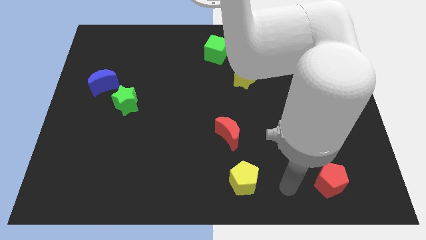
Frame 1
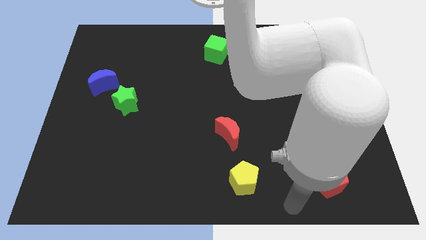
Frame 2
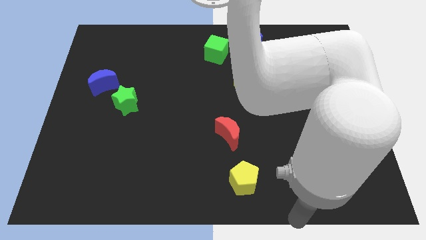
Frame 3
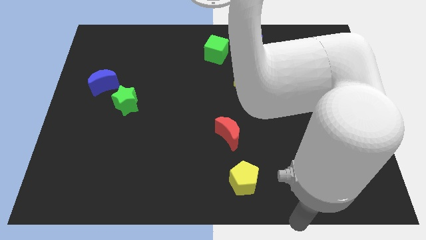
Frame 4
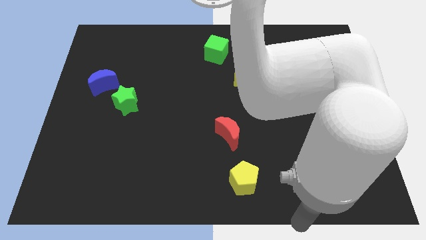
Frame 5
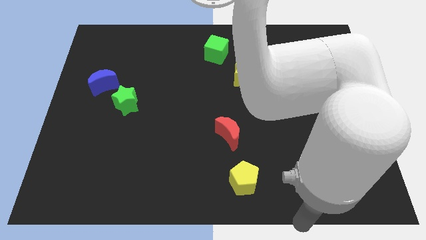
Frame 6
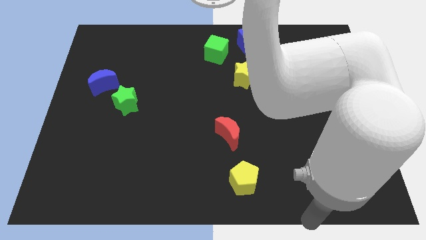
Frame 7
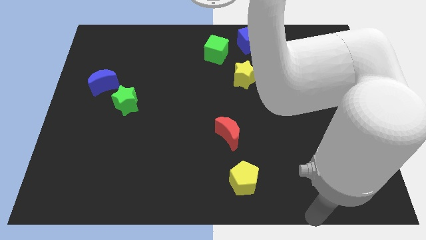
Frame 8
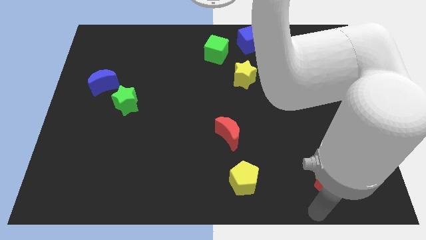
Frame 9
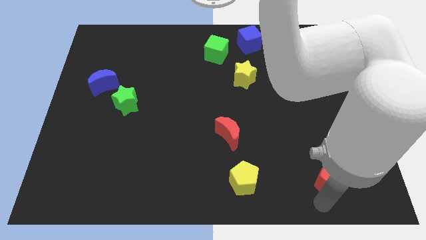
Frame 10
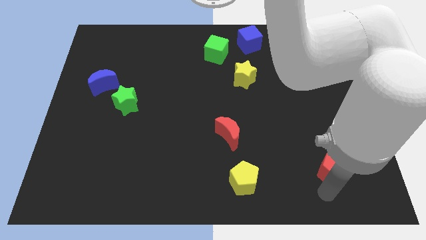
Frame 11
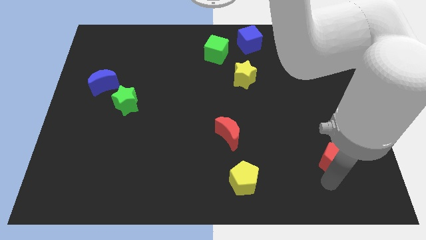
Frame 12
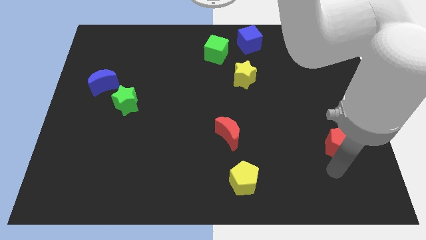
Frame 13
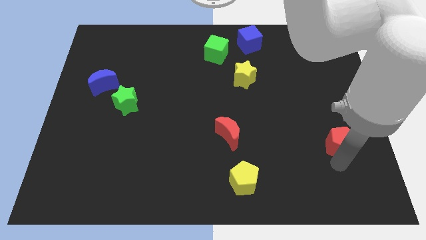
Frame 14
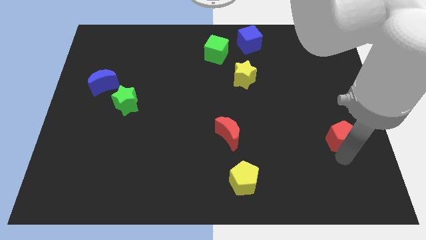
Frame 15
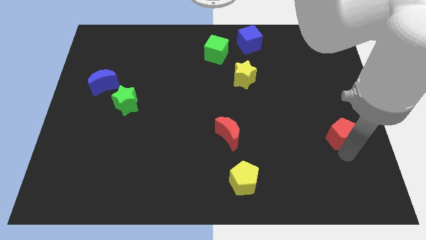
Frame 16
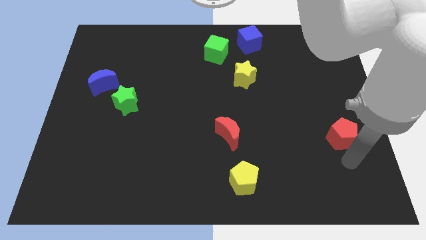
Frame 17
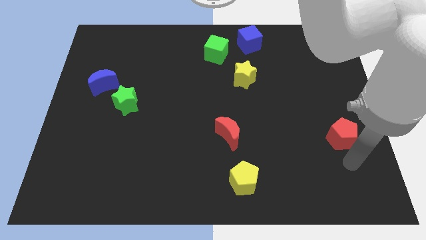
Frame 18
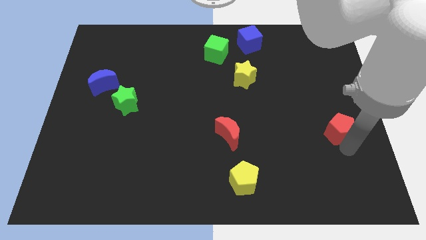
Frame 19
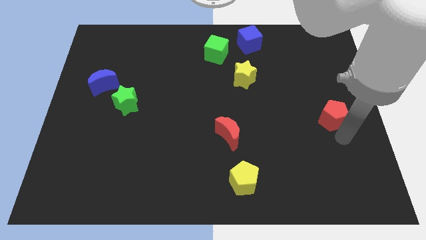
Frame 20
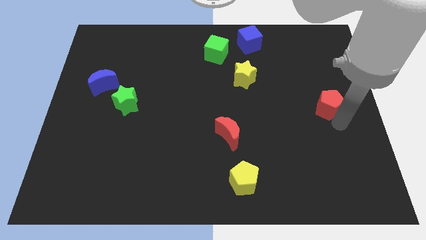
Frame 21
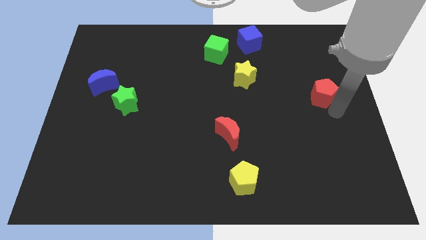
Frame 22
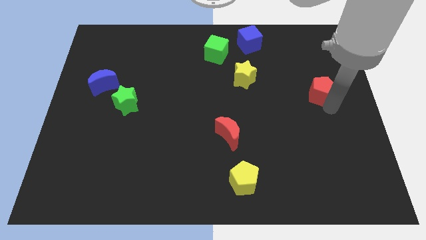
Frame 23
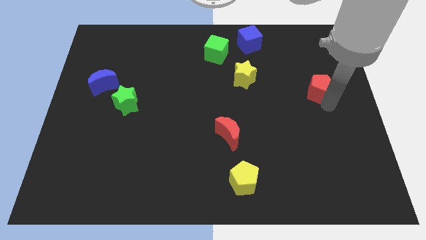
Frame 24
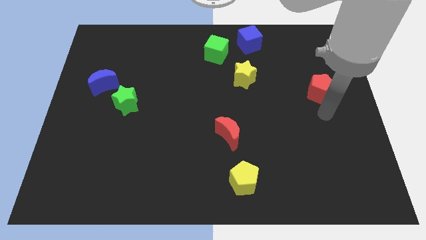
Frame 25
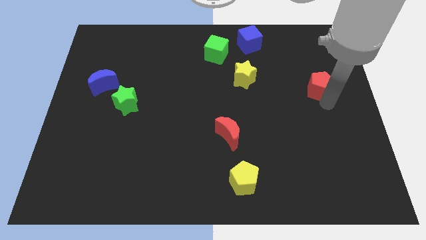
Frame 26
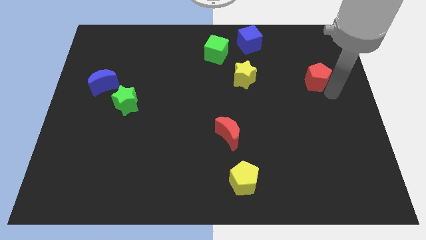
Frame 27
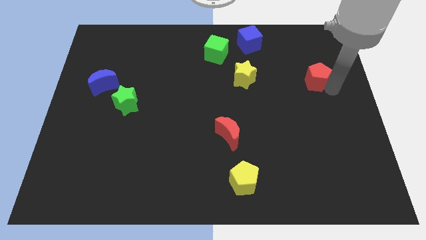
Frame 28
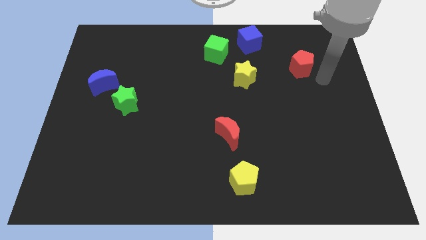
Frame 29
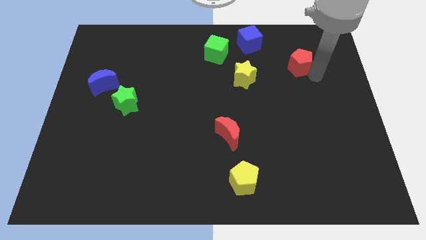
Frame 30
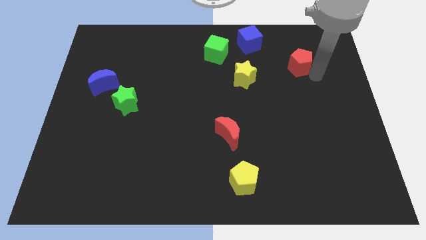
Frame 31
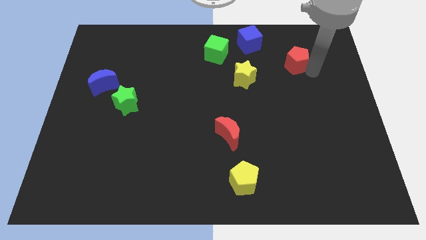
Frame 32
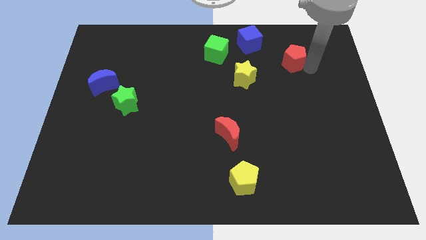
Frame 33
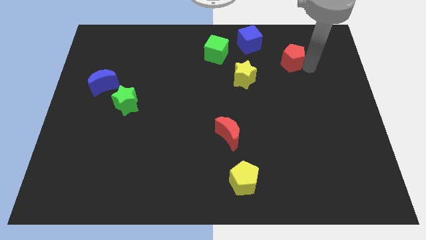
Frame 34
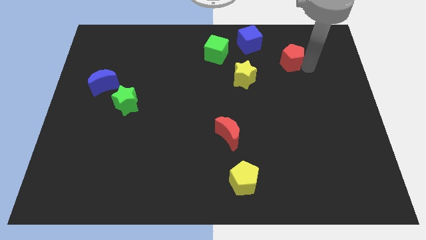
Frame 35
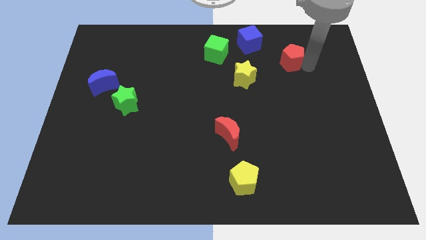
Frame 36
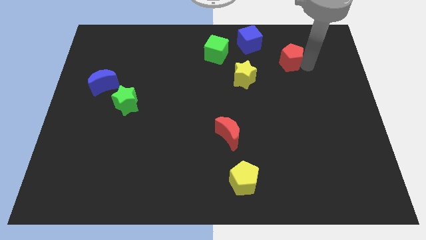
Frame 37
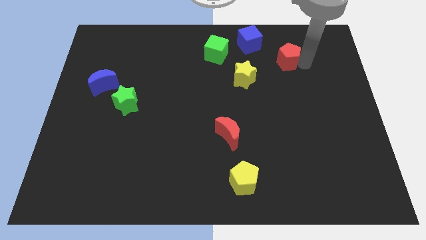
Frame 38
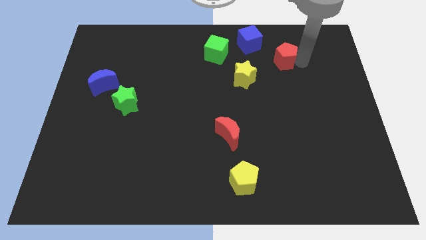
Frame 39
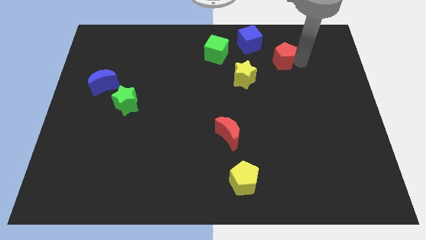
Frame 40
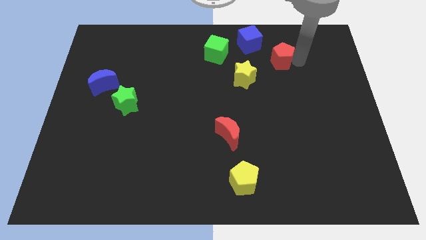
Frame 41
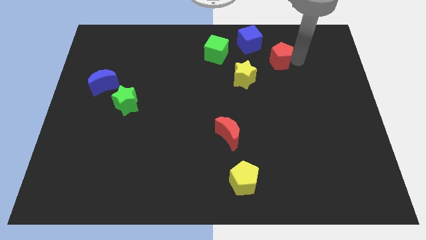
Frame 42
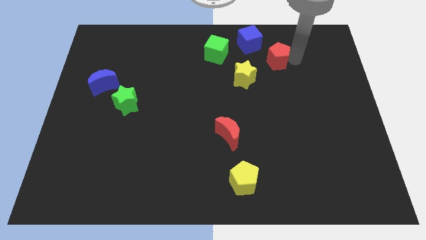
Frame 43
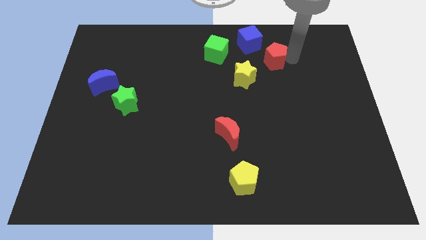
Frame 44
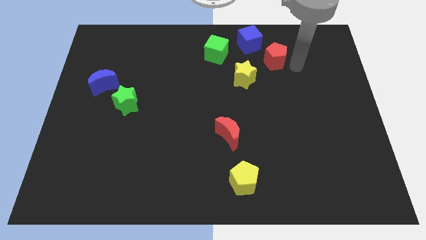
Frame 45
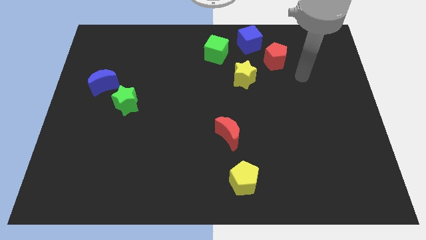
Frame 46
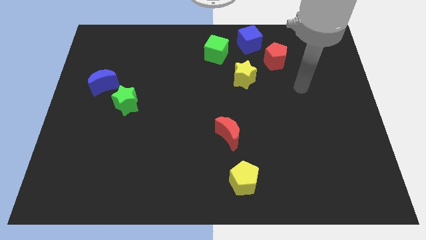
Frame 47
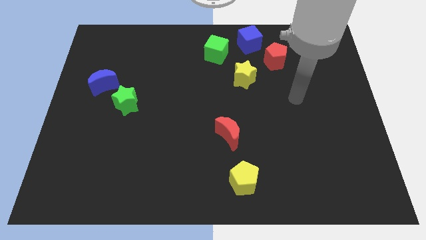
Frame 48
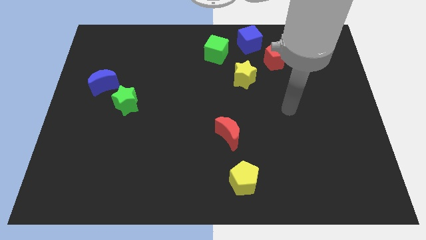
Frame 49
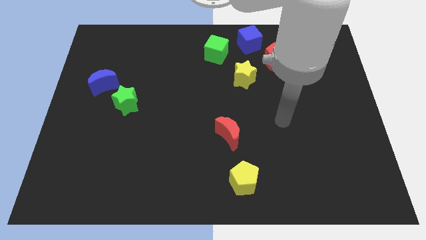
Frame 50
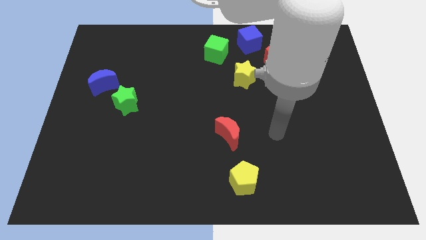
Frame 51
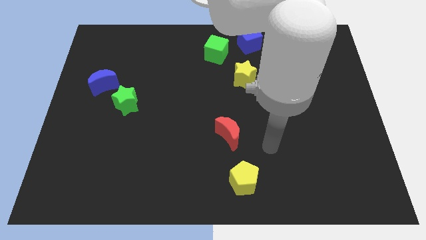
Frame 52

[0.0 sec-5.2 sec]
move the red pentagon to the right of the green cube

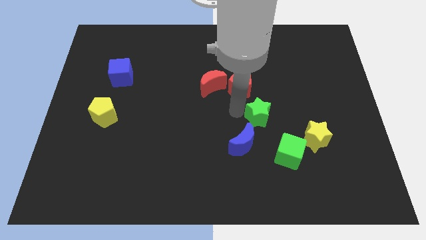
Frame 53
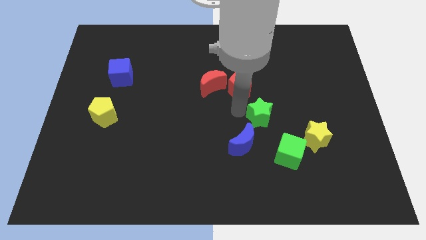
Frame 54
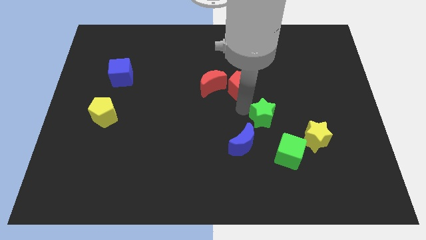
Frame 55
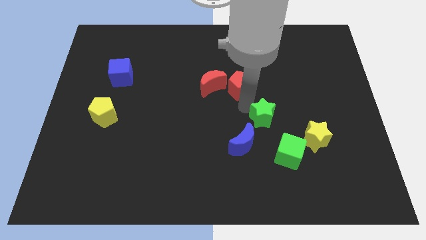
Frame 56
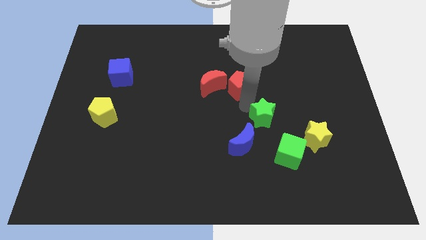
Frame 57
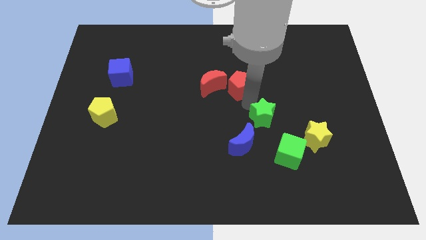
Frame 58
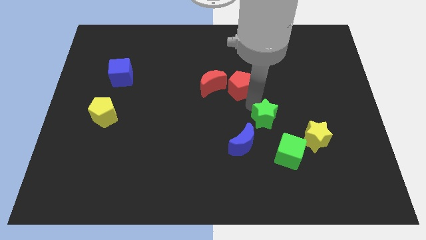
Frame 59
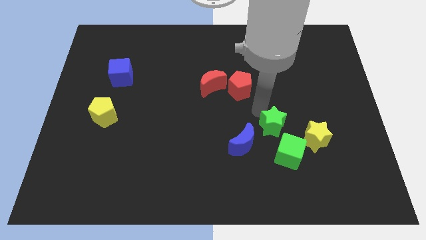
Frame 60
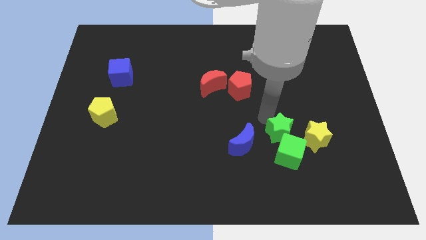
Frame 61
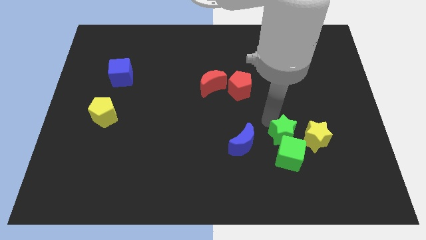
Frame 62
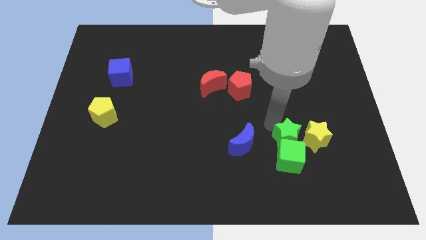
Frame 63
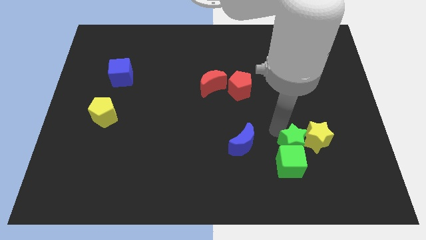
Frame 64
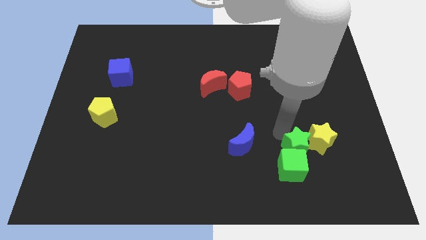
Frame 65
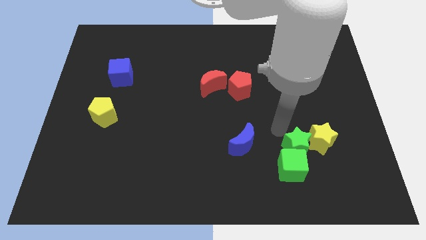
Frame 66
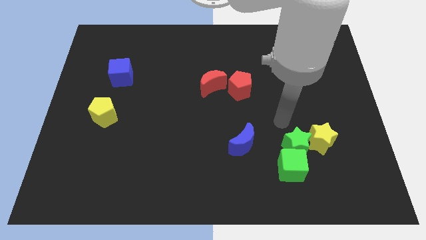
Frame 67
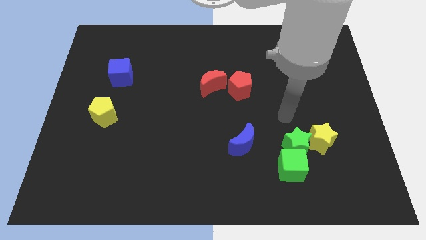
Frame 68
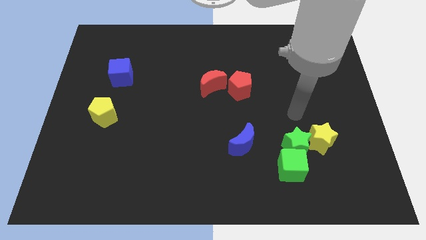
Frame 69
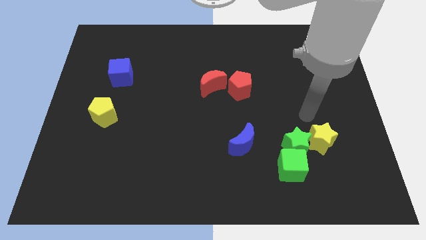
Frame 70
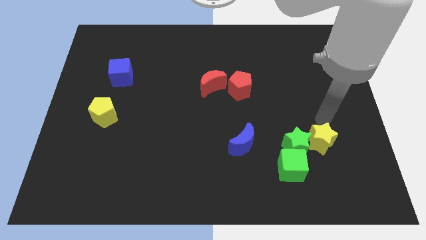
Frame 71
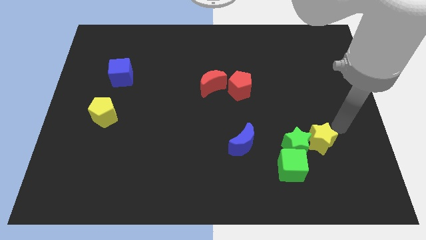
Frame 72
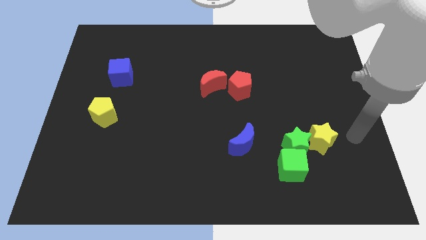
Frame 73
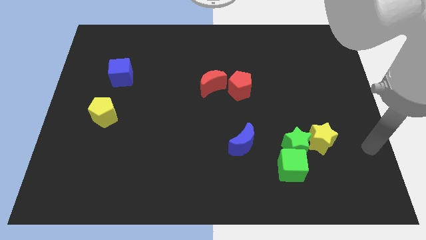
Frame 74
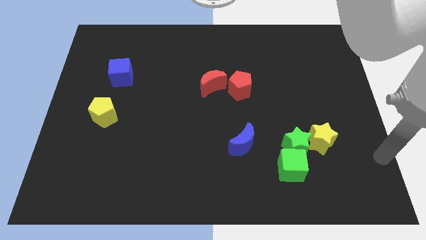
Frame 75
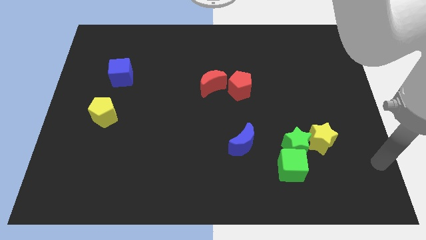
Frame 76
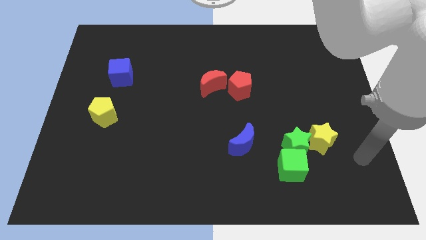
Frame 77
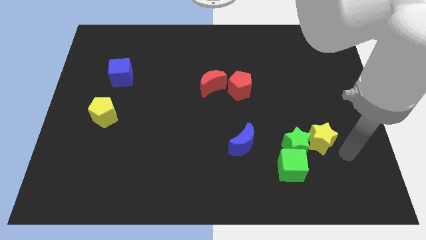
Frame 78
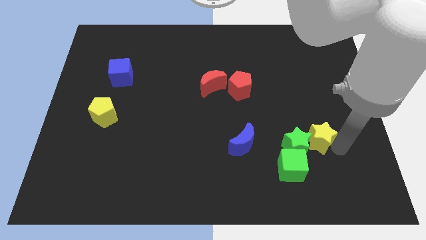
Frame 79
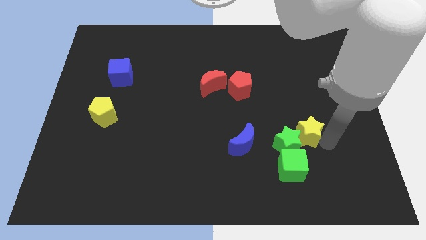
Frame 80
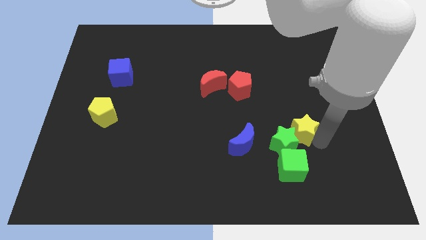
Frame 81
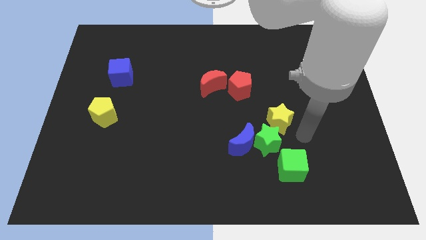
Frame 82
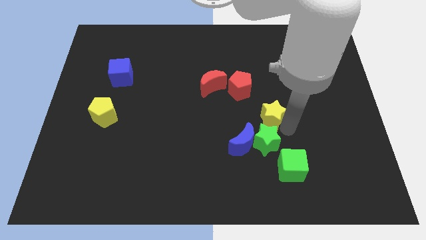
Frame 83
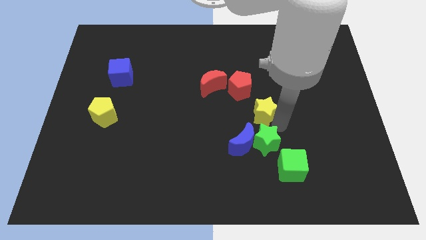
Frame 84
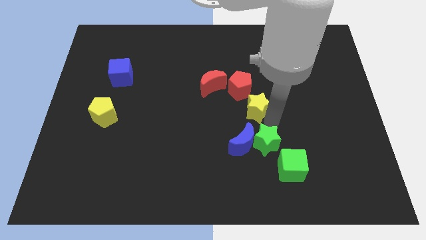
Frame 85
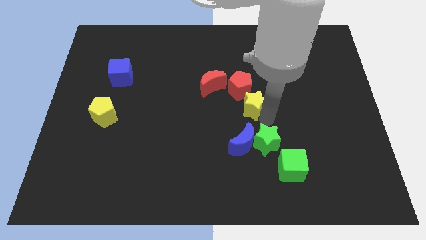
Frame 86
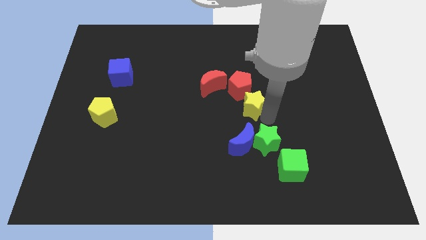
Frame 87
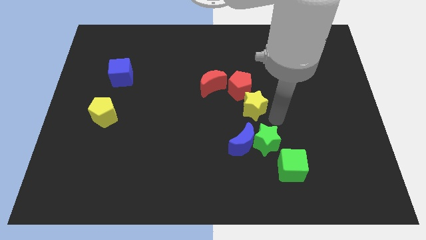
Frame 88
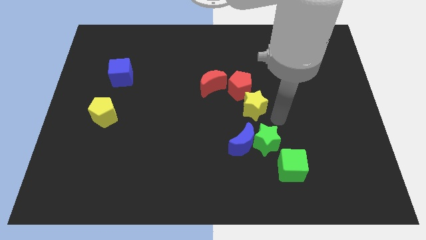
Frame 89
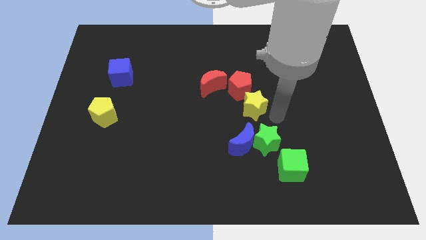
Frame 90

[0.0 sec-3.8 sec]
push the green star towards the green cube
